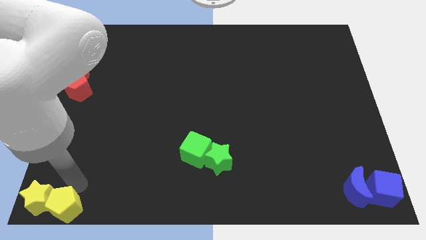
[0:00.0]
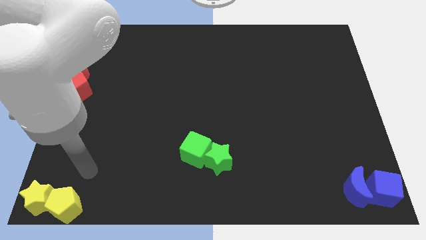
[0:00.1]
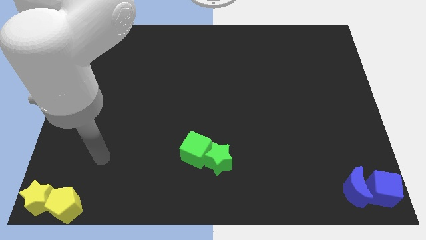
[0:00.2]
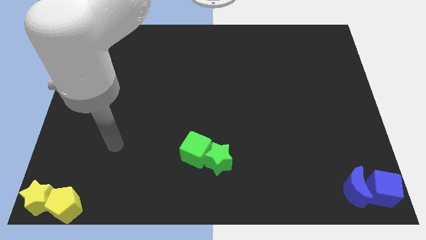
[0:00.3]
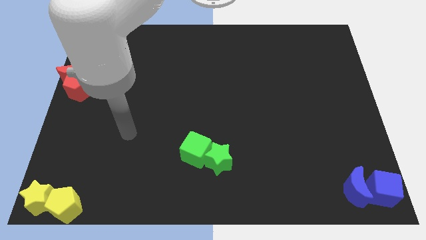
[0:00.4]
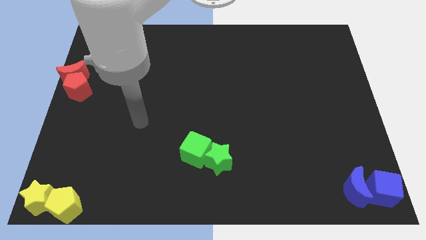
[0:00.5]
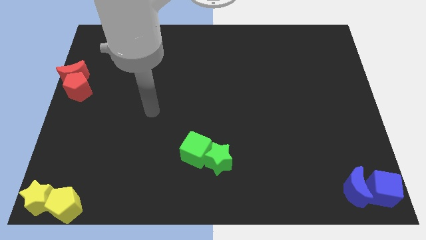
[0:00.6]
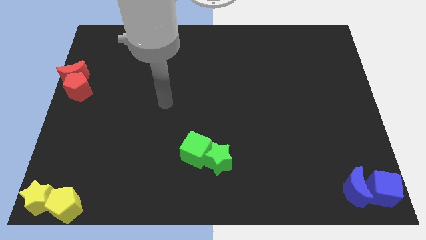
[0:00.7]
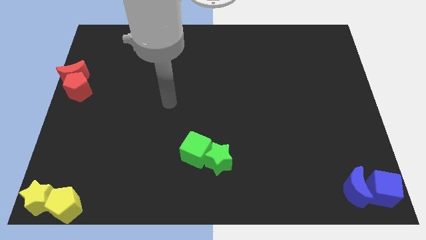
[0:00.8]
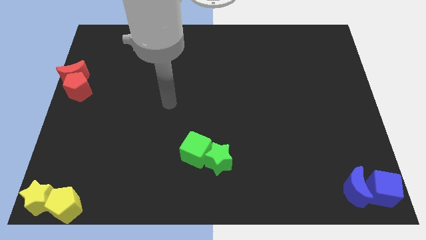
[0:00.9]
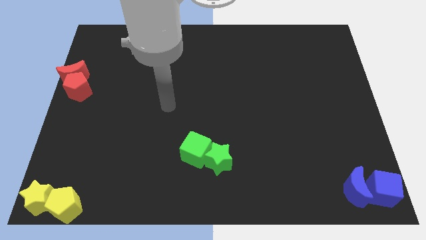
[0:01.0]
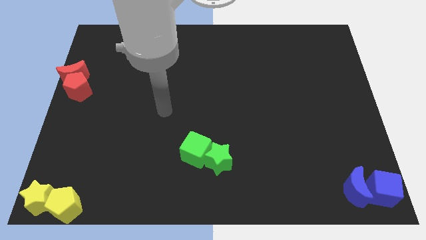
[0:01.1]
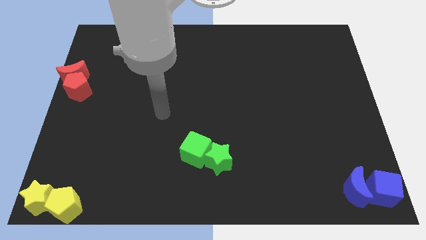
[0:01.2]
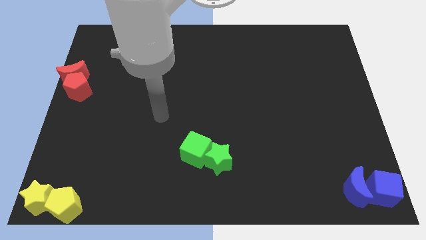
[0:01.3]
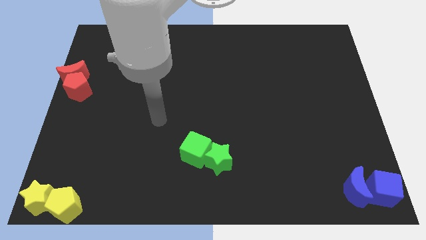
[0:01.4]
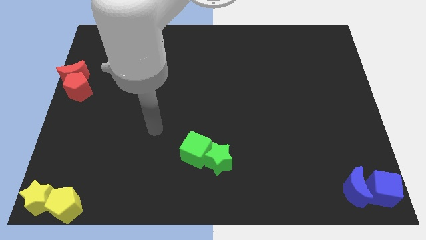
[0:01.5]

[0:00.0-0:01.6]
move the arm away from the yellow pentagon

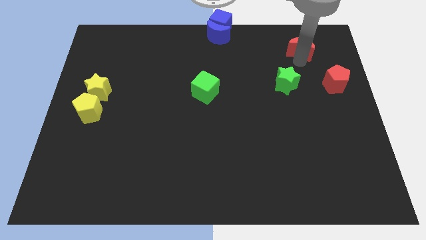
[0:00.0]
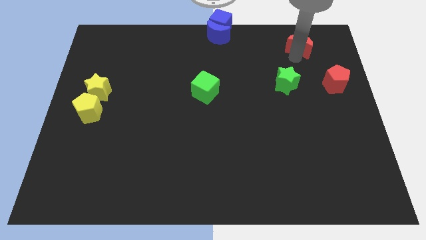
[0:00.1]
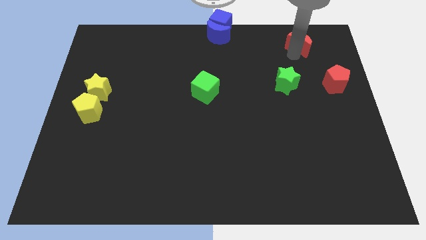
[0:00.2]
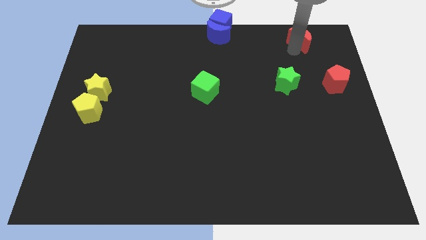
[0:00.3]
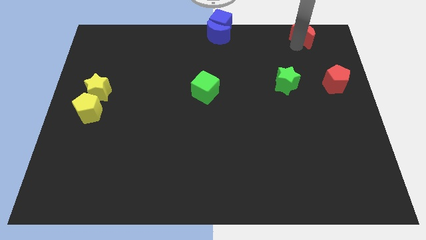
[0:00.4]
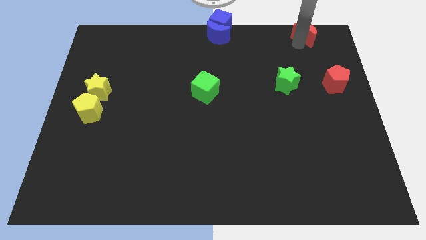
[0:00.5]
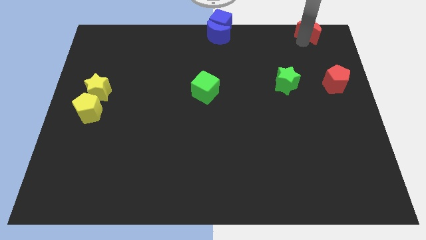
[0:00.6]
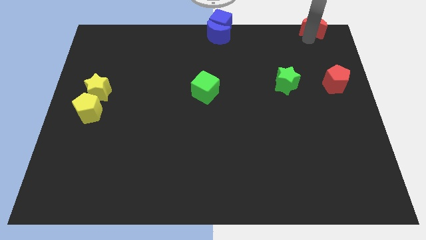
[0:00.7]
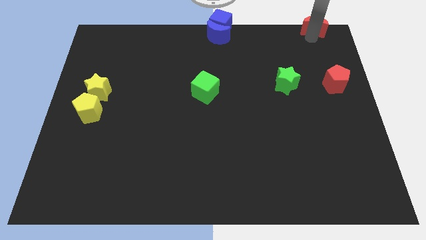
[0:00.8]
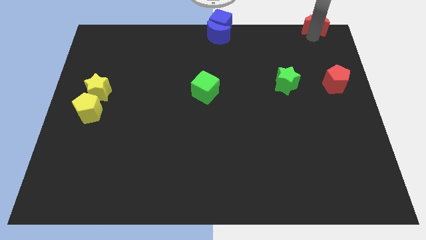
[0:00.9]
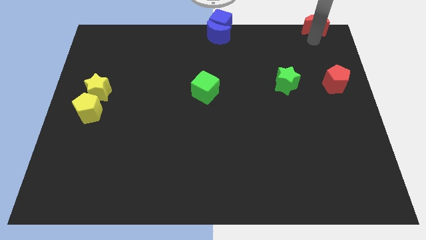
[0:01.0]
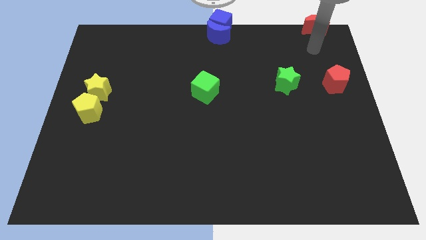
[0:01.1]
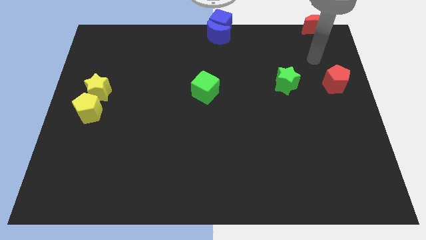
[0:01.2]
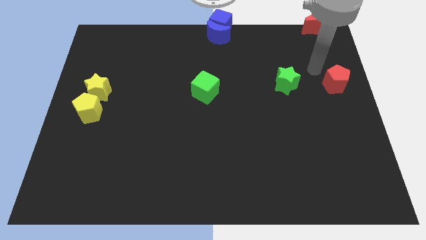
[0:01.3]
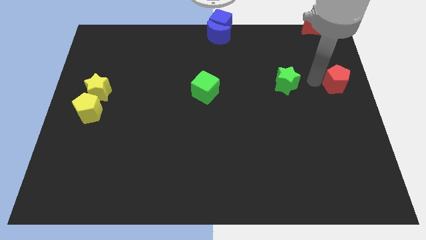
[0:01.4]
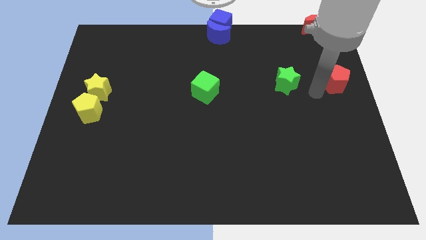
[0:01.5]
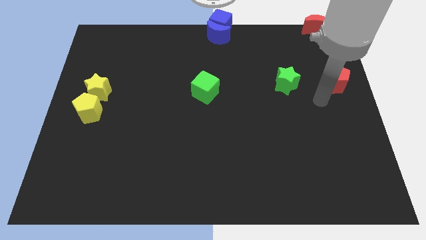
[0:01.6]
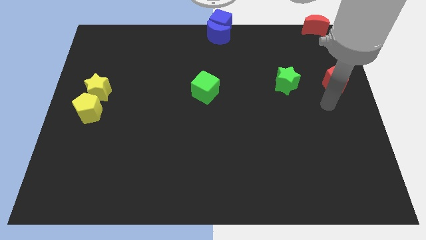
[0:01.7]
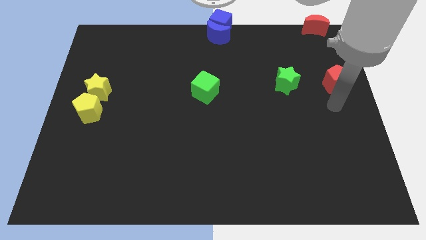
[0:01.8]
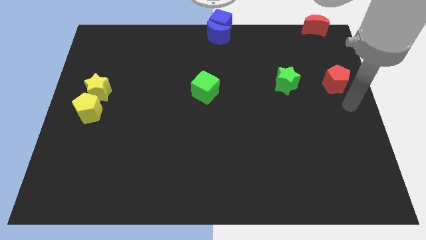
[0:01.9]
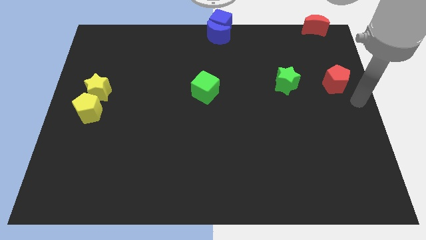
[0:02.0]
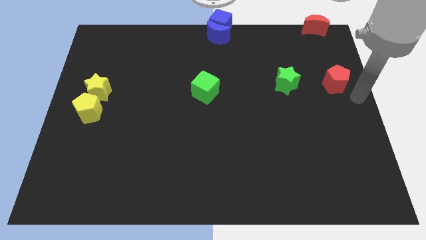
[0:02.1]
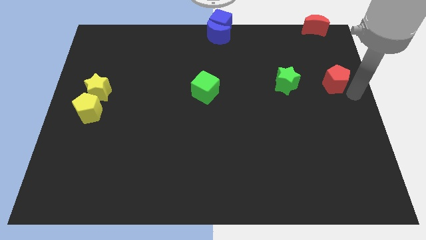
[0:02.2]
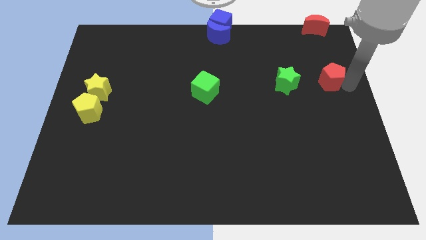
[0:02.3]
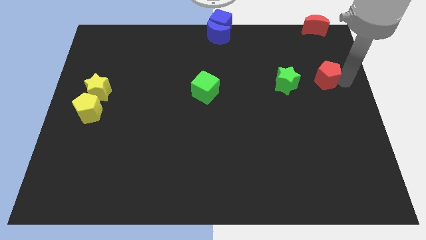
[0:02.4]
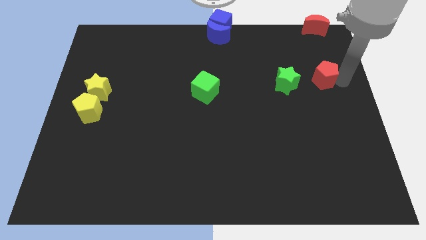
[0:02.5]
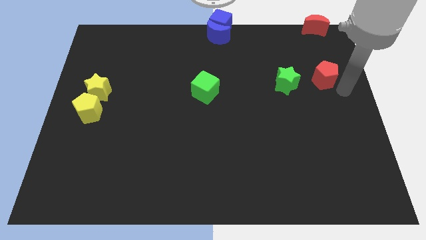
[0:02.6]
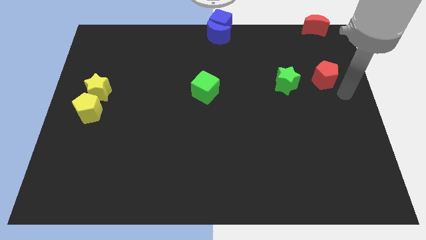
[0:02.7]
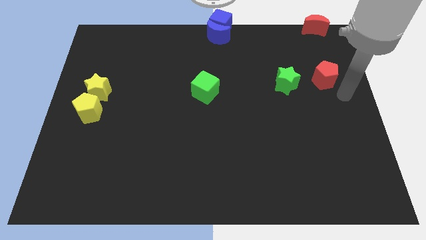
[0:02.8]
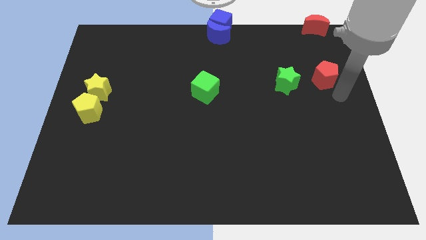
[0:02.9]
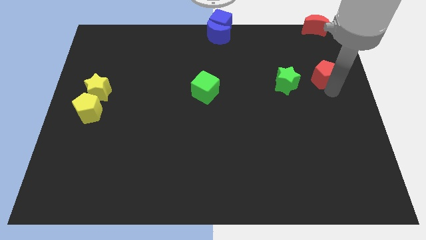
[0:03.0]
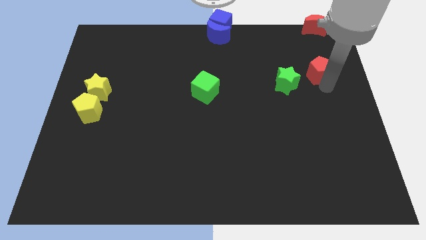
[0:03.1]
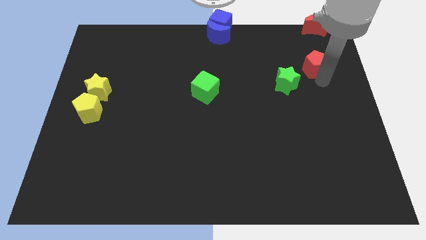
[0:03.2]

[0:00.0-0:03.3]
move the red blocks vertical to each other

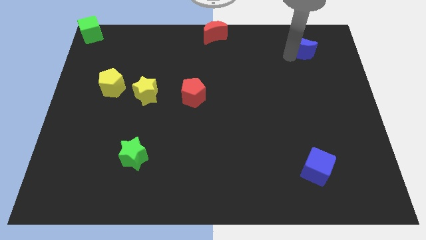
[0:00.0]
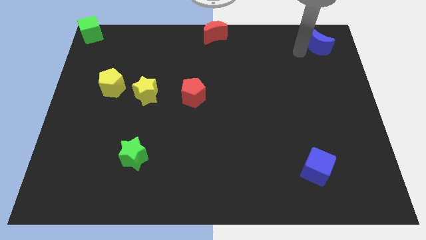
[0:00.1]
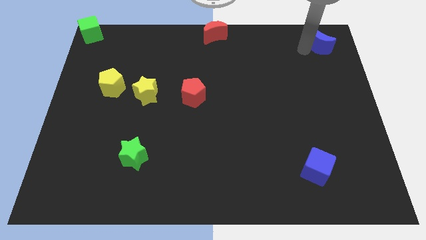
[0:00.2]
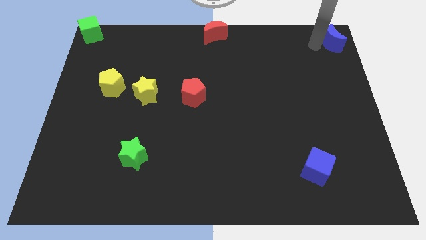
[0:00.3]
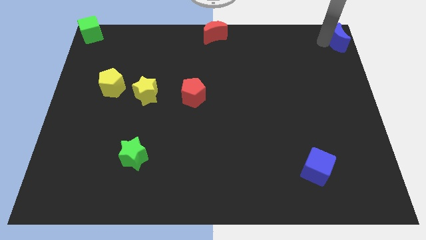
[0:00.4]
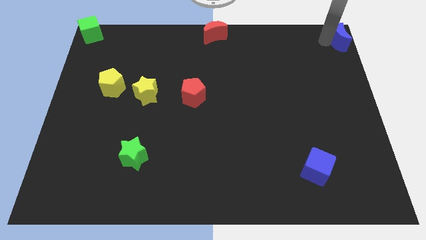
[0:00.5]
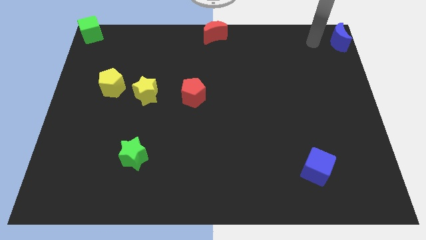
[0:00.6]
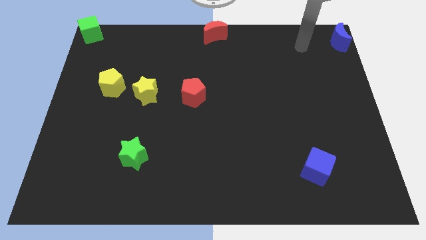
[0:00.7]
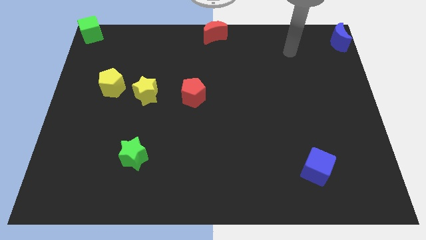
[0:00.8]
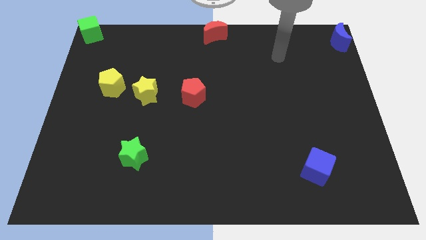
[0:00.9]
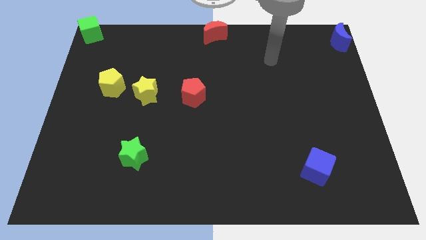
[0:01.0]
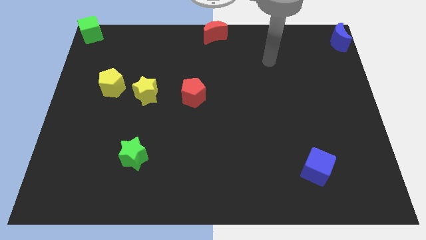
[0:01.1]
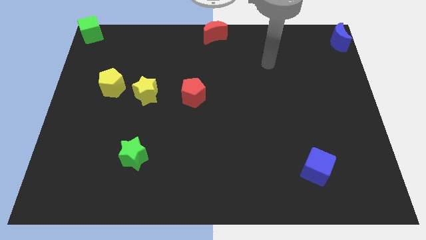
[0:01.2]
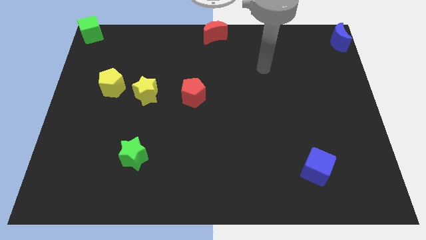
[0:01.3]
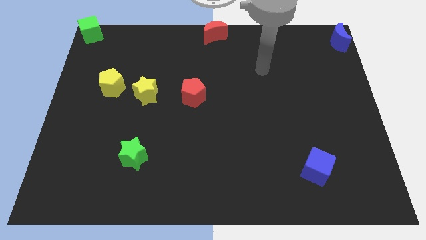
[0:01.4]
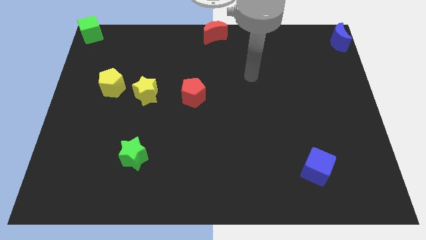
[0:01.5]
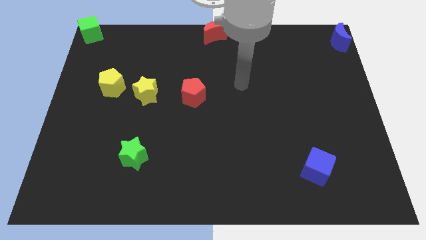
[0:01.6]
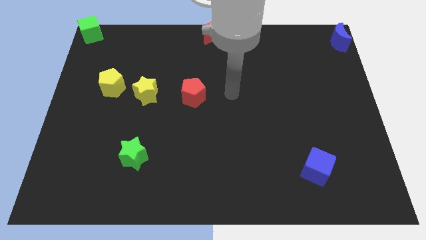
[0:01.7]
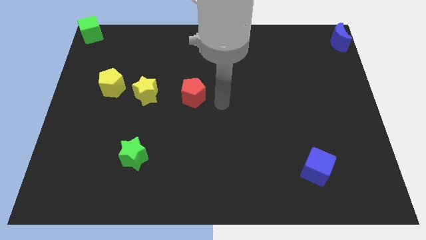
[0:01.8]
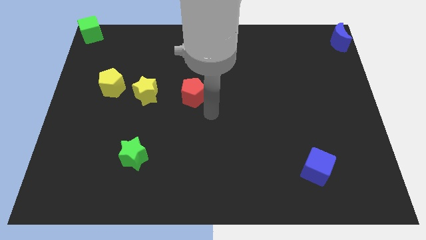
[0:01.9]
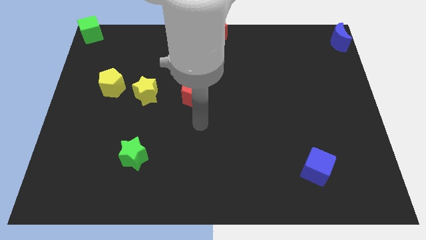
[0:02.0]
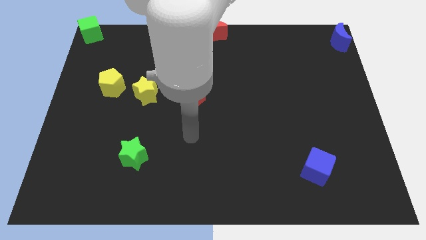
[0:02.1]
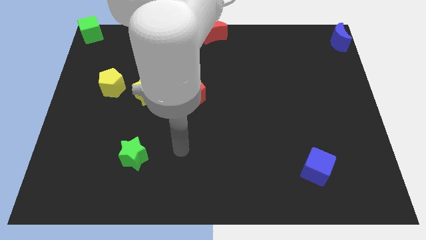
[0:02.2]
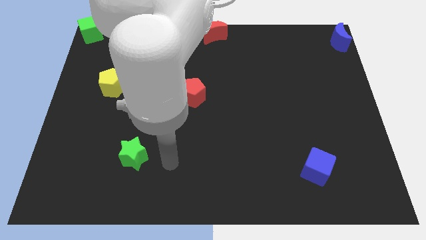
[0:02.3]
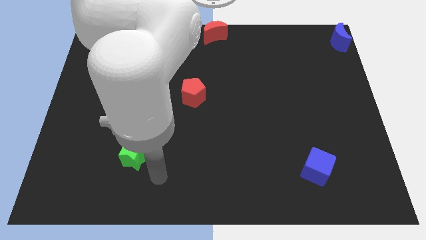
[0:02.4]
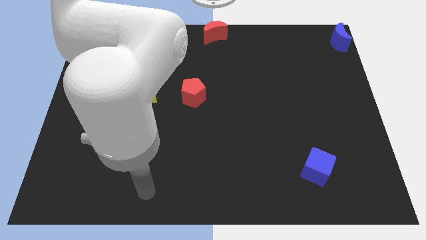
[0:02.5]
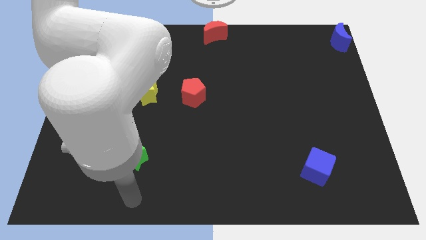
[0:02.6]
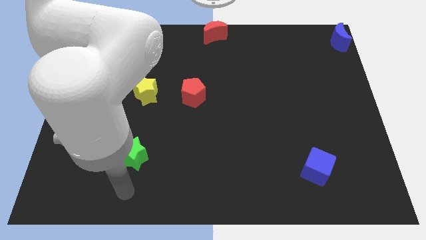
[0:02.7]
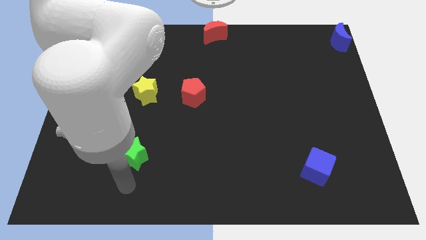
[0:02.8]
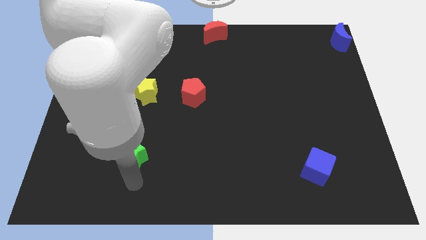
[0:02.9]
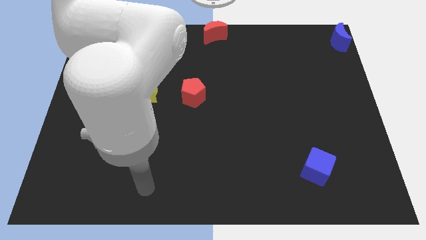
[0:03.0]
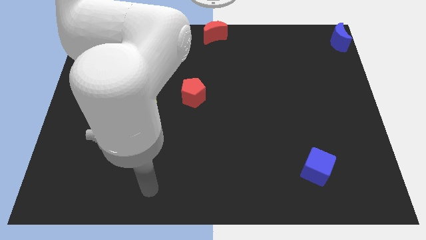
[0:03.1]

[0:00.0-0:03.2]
move the arm away from the blue moon

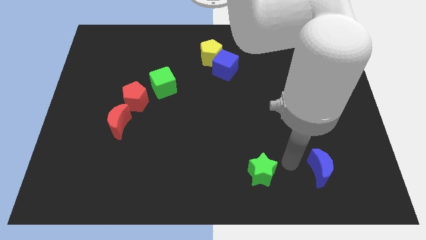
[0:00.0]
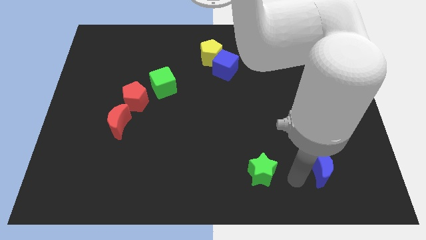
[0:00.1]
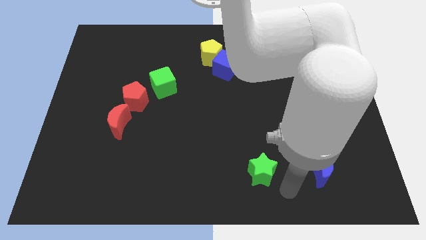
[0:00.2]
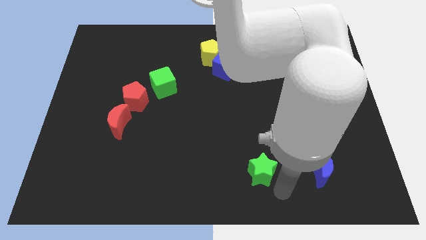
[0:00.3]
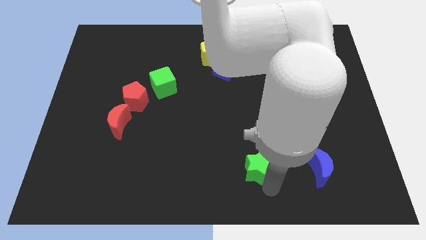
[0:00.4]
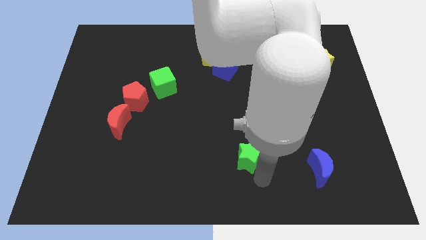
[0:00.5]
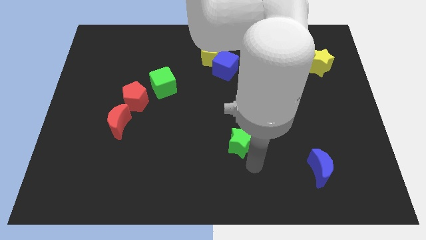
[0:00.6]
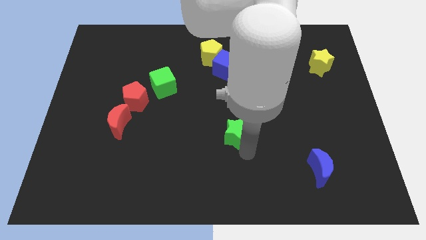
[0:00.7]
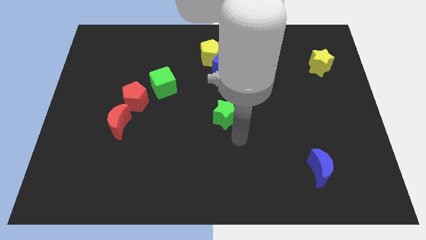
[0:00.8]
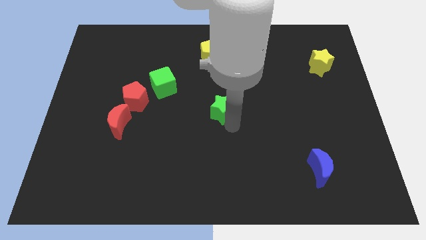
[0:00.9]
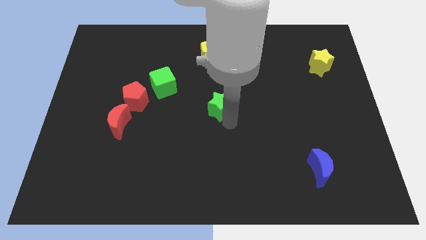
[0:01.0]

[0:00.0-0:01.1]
push the green star to the center of the board
